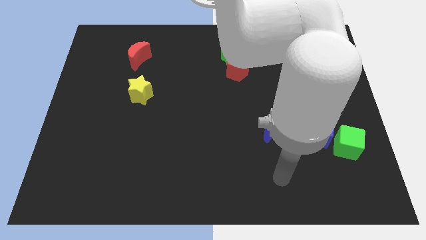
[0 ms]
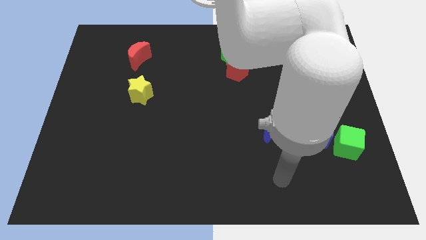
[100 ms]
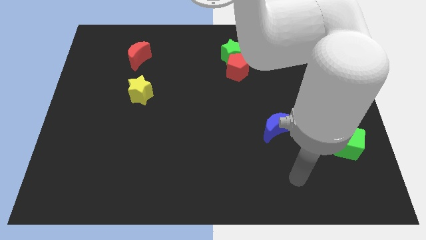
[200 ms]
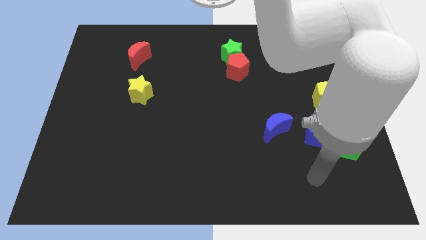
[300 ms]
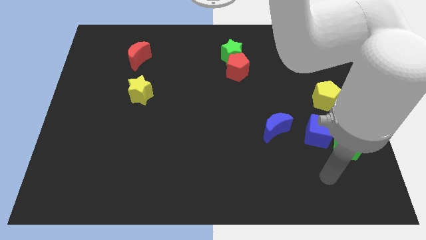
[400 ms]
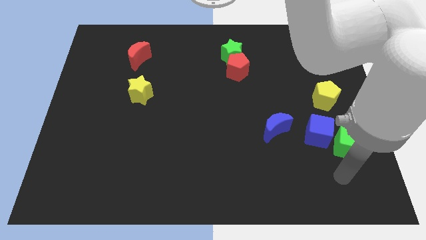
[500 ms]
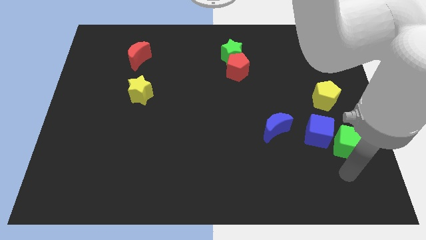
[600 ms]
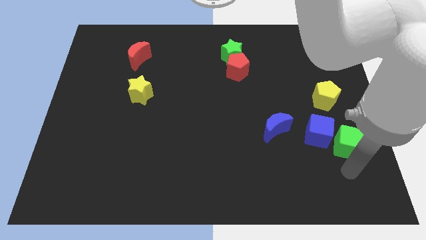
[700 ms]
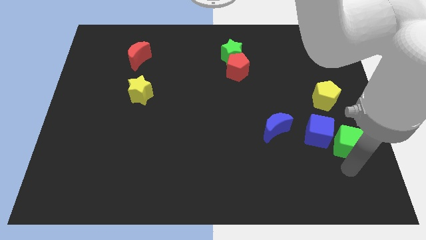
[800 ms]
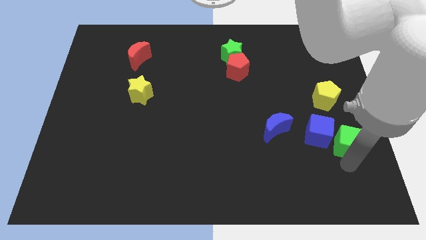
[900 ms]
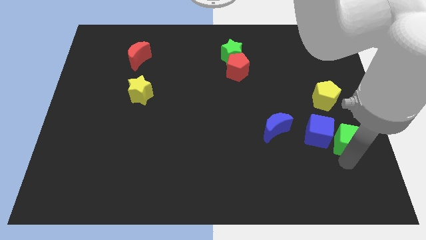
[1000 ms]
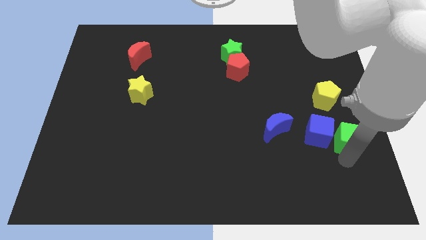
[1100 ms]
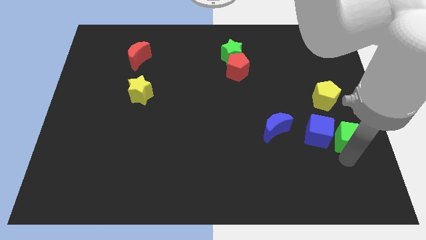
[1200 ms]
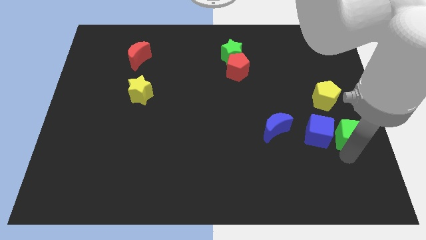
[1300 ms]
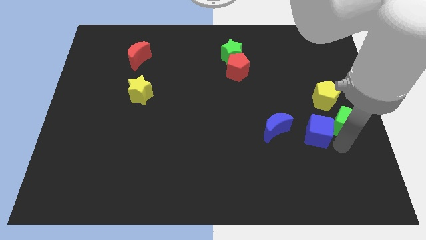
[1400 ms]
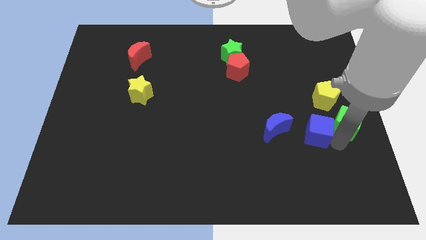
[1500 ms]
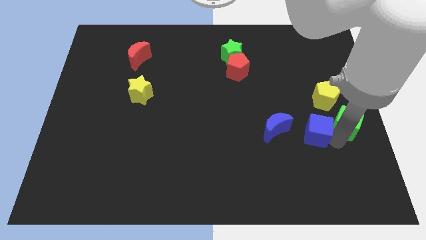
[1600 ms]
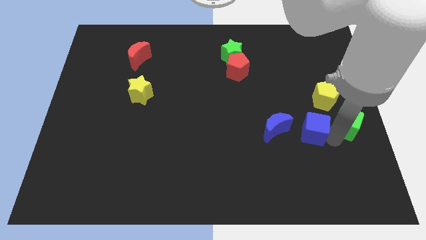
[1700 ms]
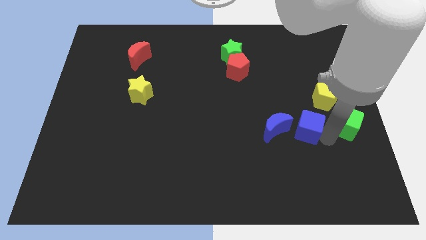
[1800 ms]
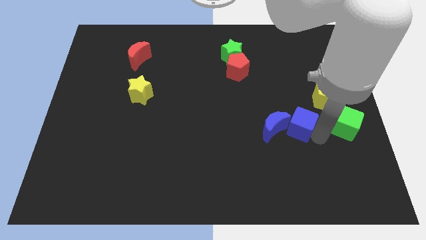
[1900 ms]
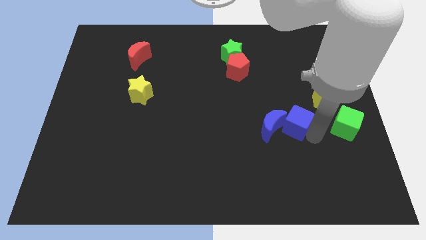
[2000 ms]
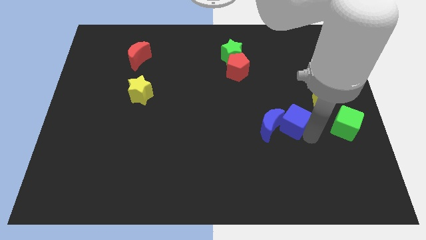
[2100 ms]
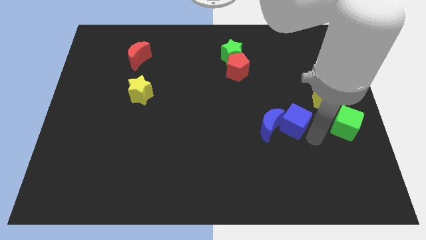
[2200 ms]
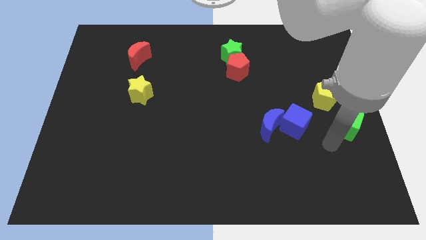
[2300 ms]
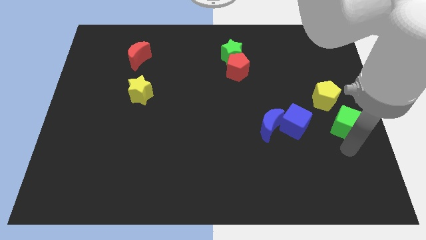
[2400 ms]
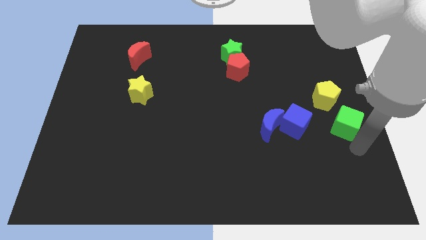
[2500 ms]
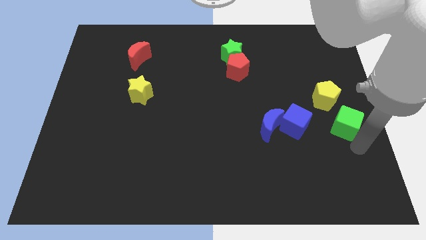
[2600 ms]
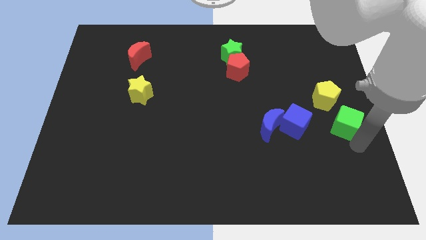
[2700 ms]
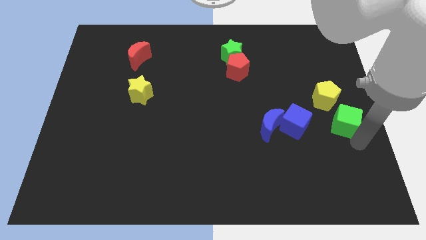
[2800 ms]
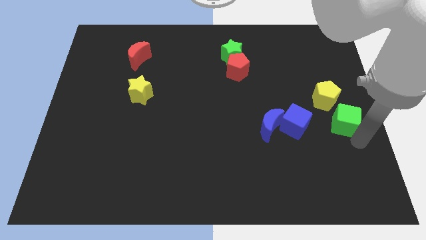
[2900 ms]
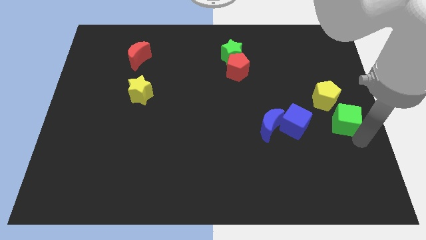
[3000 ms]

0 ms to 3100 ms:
separate blue and green cubes from each other

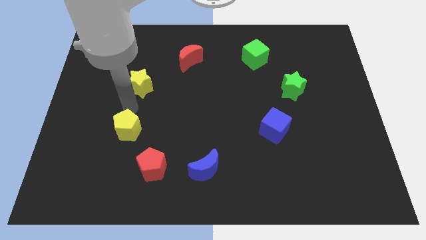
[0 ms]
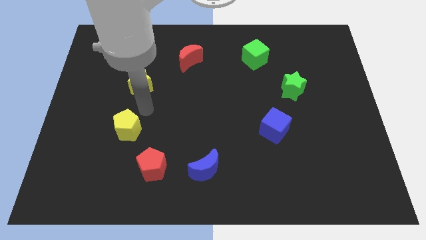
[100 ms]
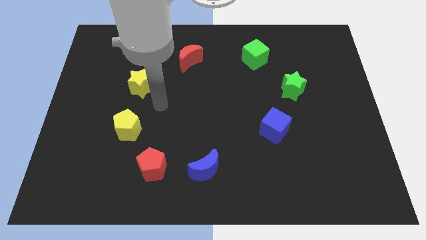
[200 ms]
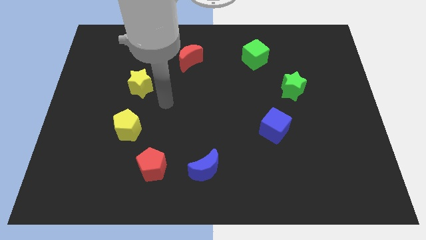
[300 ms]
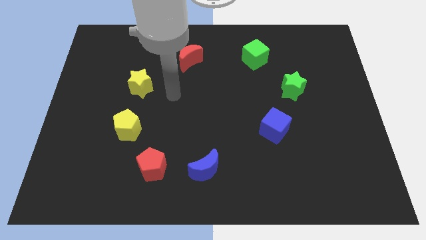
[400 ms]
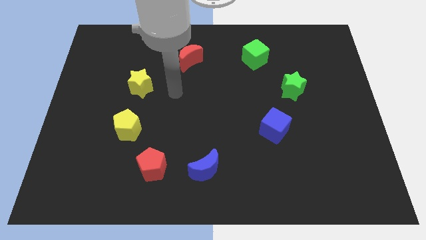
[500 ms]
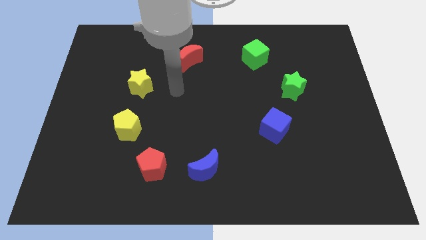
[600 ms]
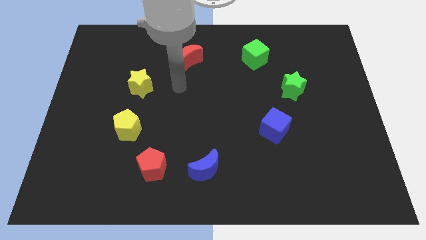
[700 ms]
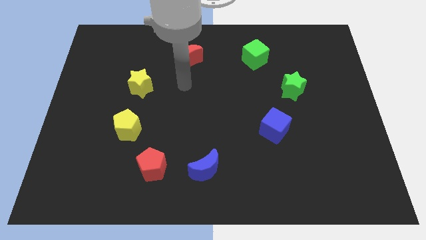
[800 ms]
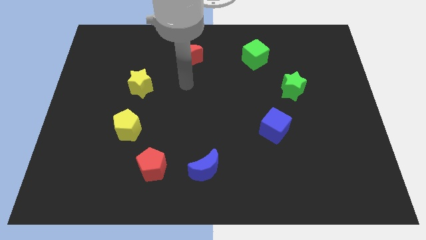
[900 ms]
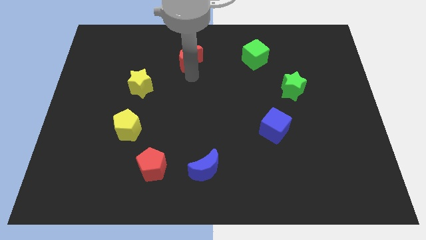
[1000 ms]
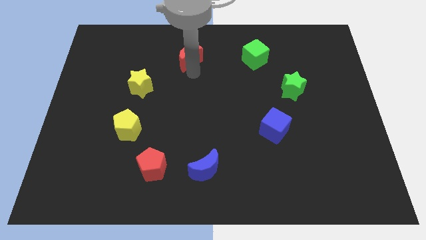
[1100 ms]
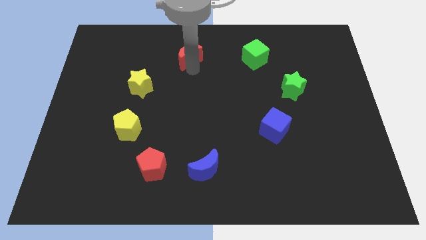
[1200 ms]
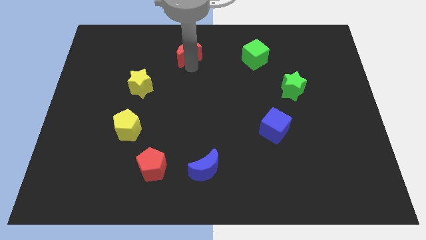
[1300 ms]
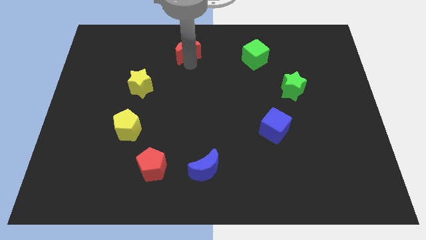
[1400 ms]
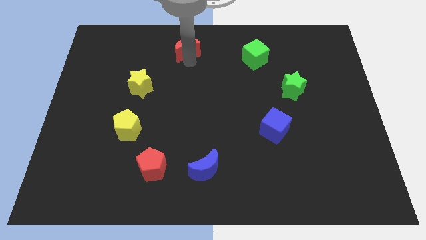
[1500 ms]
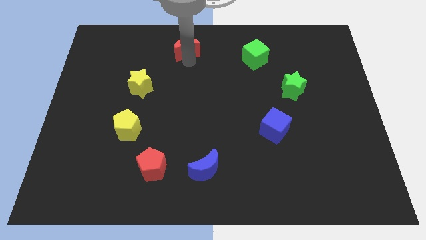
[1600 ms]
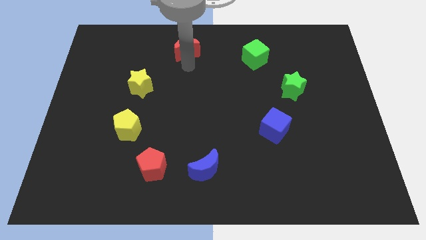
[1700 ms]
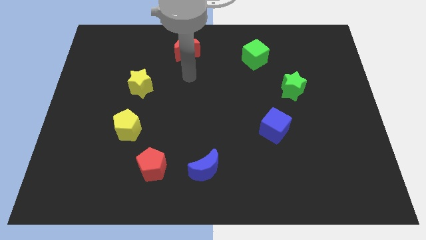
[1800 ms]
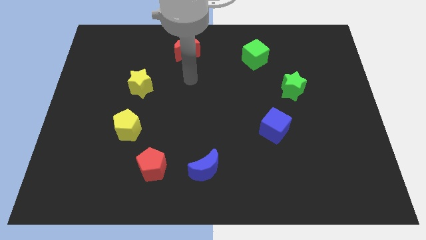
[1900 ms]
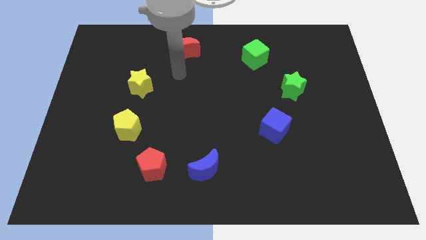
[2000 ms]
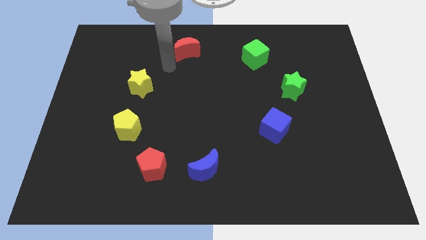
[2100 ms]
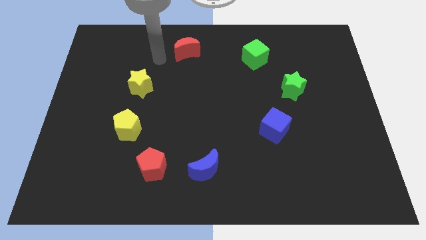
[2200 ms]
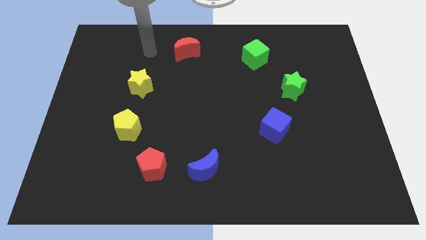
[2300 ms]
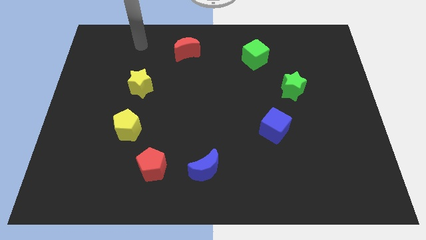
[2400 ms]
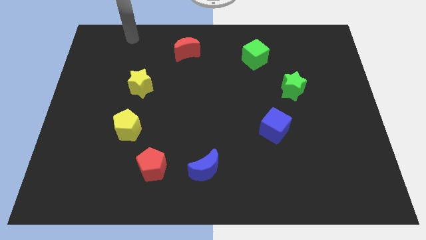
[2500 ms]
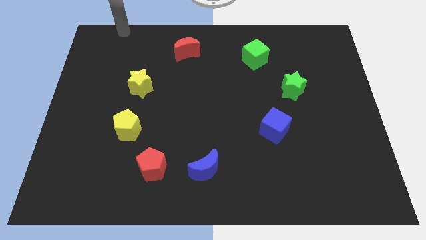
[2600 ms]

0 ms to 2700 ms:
touch the red moon

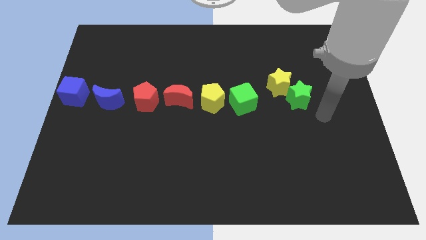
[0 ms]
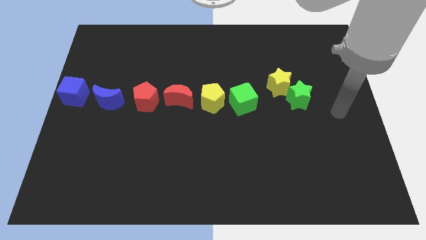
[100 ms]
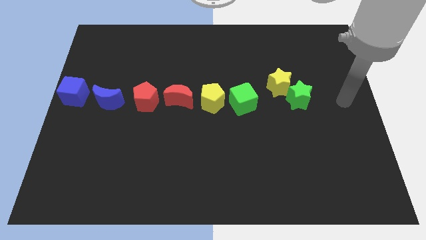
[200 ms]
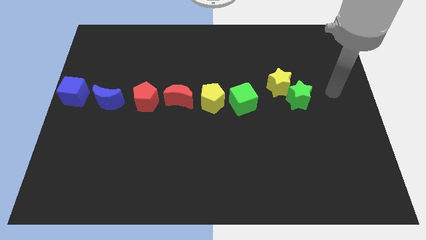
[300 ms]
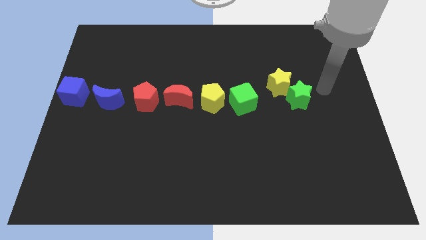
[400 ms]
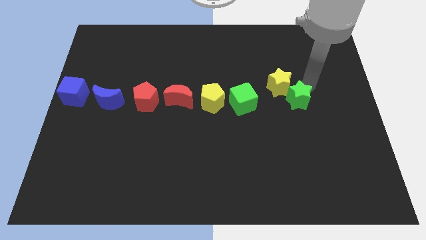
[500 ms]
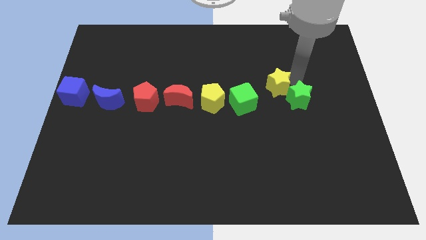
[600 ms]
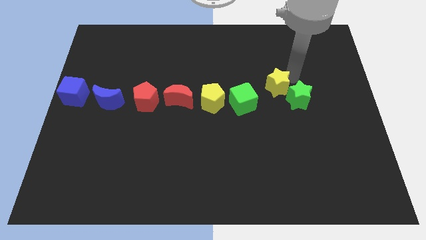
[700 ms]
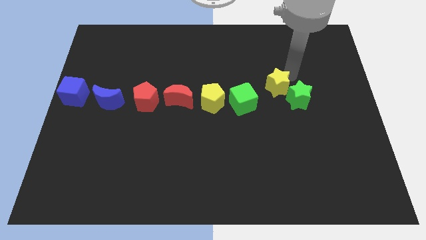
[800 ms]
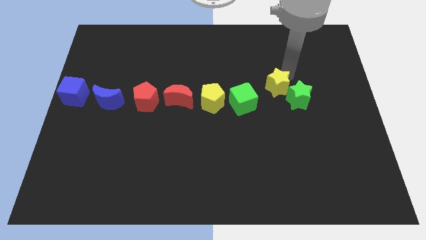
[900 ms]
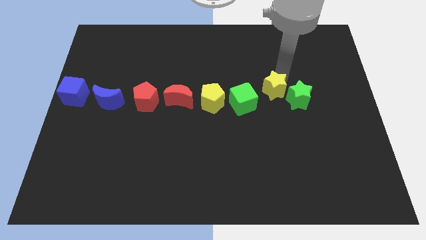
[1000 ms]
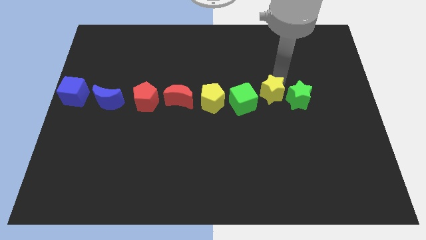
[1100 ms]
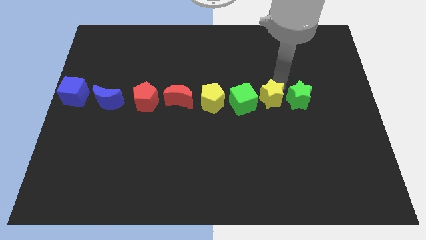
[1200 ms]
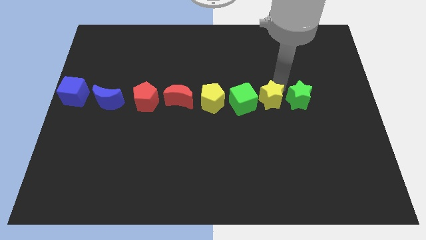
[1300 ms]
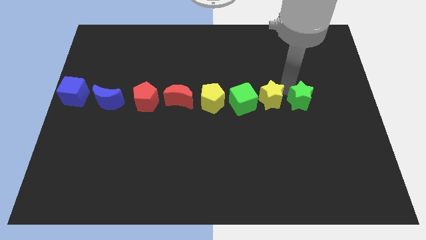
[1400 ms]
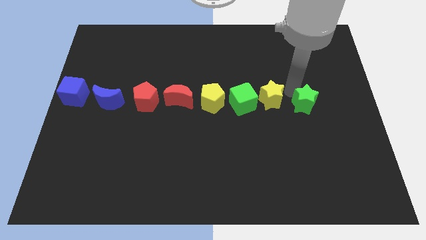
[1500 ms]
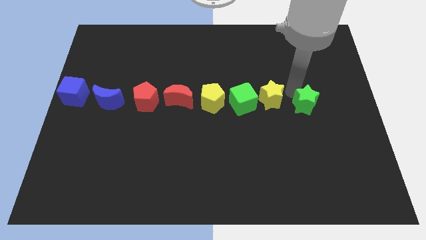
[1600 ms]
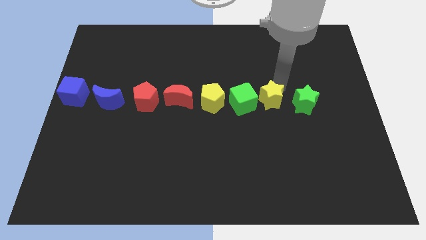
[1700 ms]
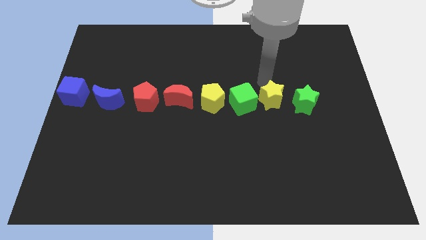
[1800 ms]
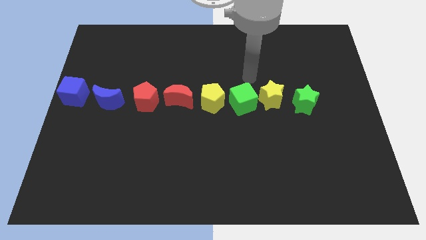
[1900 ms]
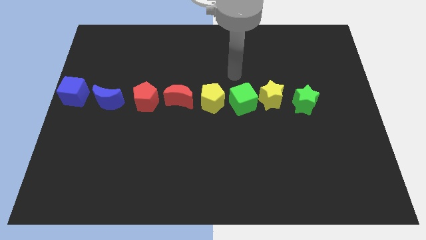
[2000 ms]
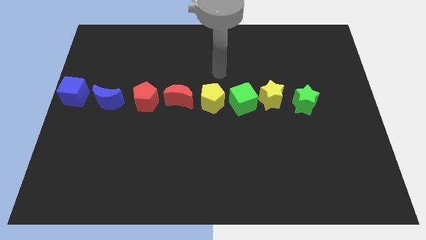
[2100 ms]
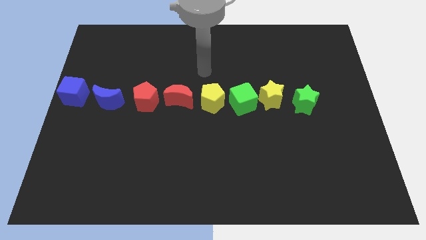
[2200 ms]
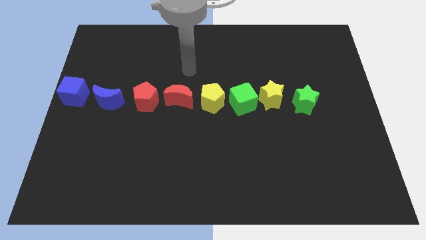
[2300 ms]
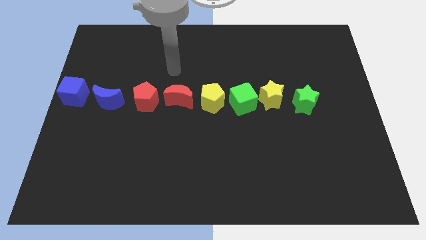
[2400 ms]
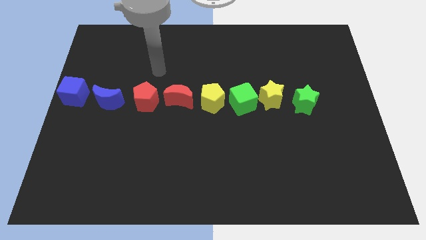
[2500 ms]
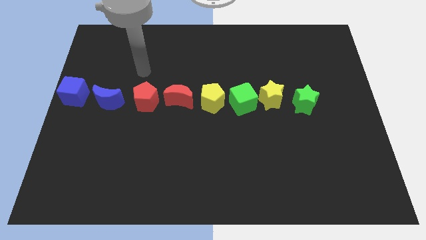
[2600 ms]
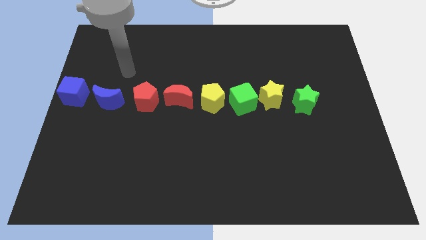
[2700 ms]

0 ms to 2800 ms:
push the yellow star between the green cube and green star

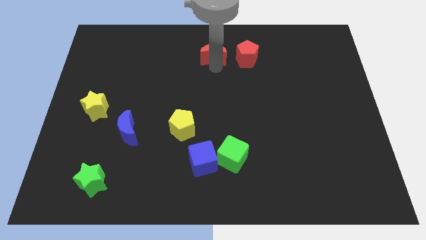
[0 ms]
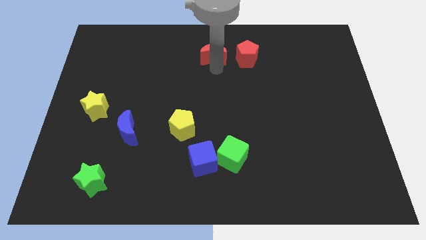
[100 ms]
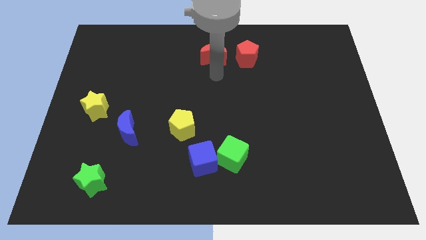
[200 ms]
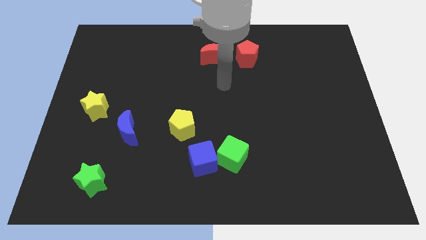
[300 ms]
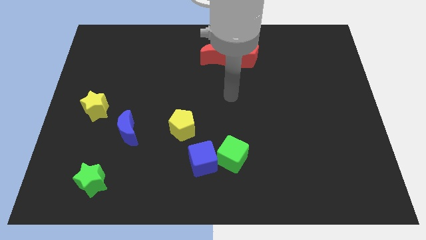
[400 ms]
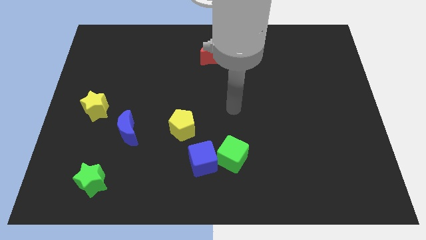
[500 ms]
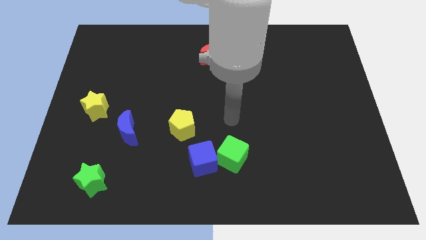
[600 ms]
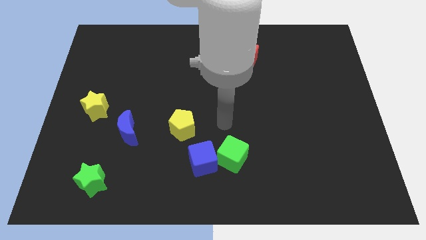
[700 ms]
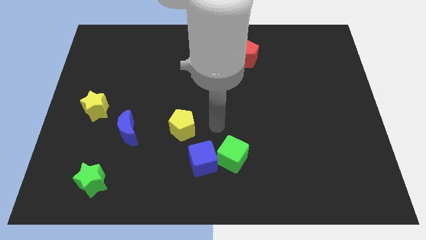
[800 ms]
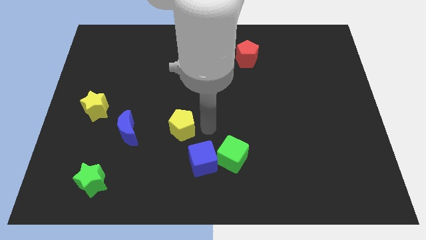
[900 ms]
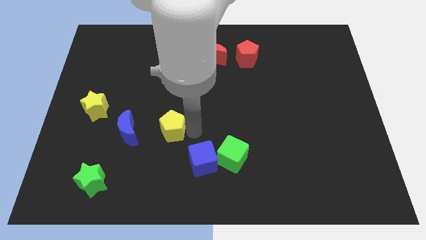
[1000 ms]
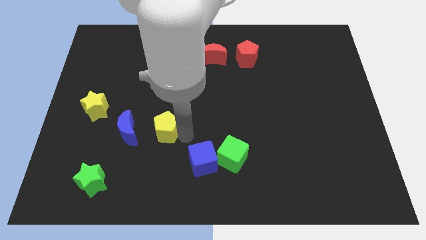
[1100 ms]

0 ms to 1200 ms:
point your arm to the right side of yellow pentagon
